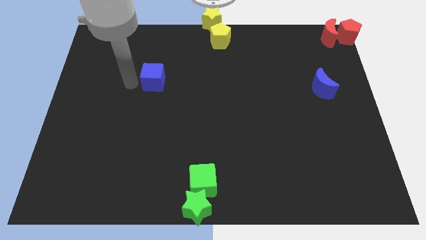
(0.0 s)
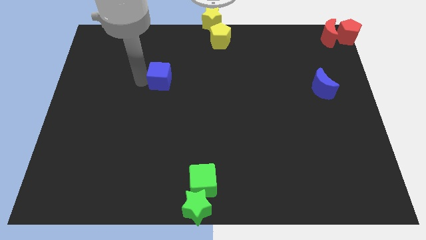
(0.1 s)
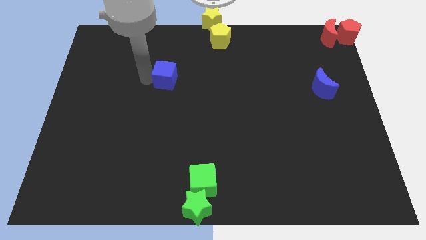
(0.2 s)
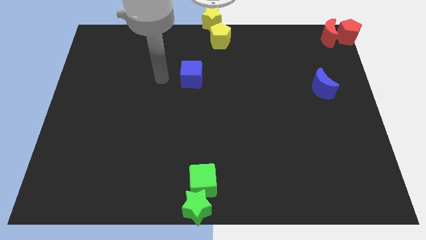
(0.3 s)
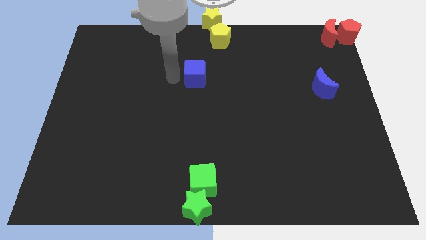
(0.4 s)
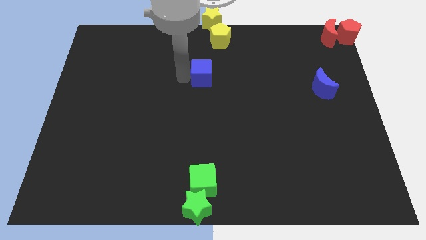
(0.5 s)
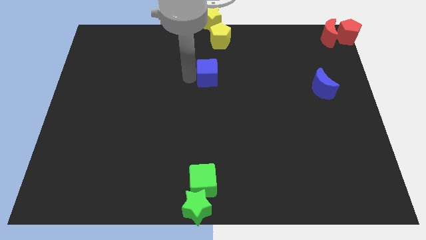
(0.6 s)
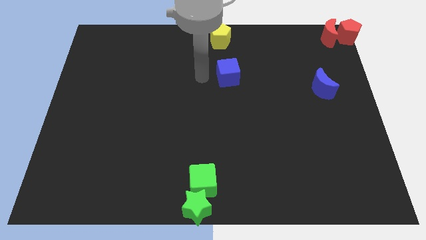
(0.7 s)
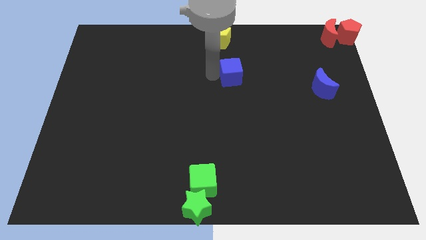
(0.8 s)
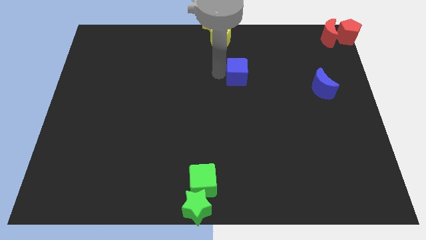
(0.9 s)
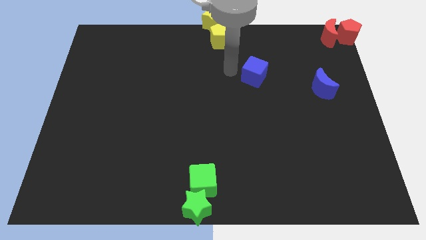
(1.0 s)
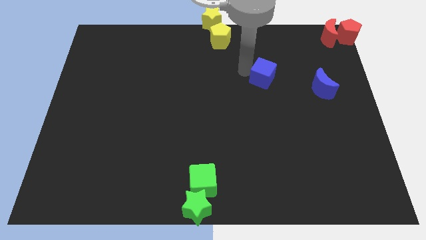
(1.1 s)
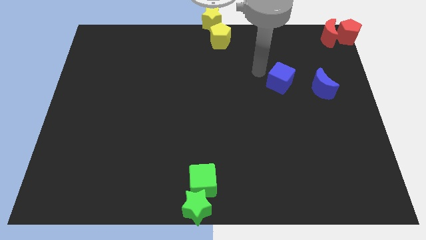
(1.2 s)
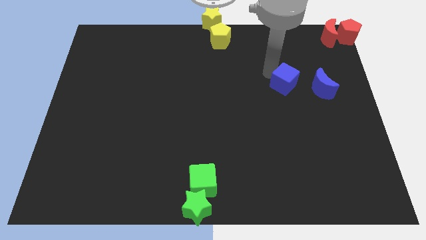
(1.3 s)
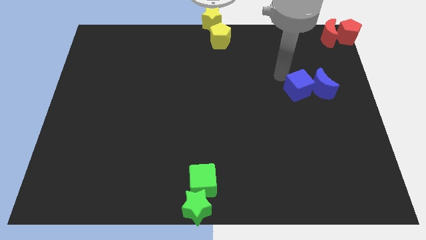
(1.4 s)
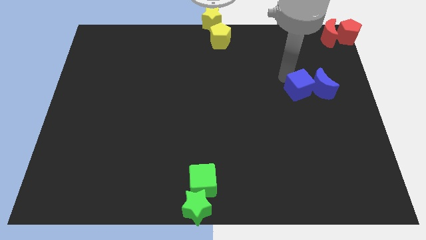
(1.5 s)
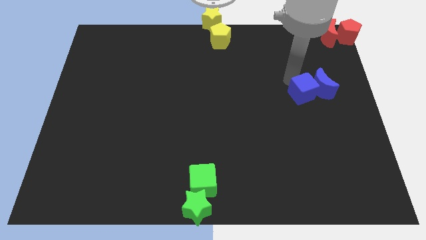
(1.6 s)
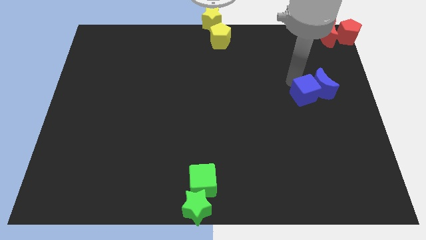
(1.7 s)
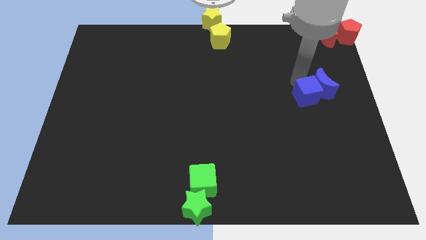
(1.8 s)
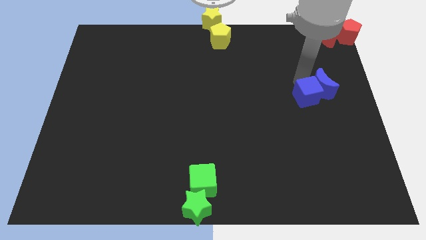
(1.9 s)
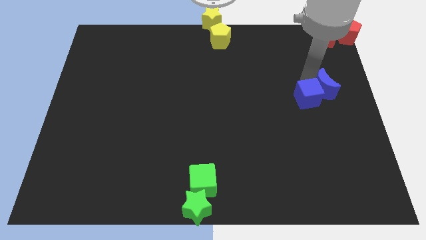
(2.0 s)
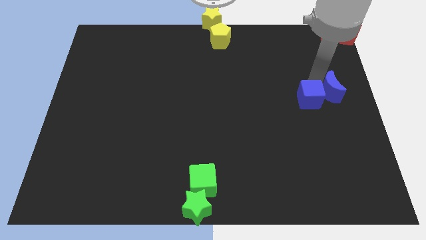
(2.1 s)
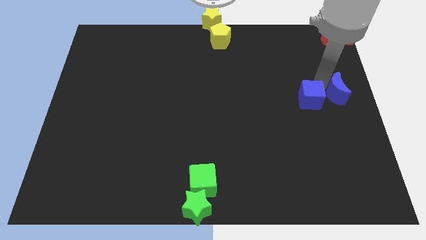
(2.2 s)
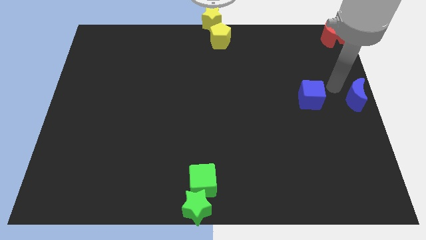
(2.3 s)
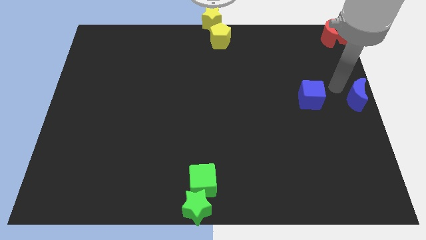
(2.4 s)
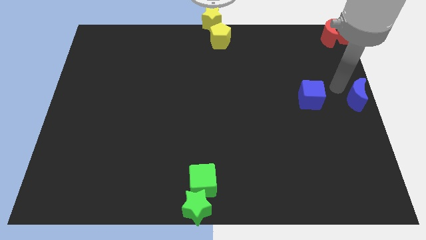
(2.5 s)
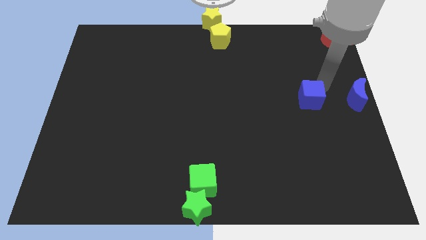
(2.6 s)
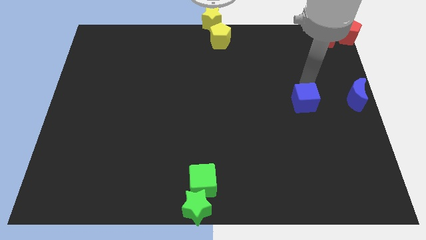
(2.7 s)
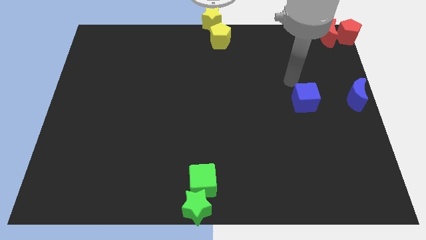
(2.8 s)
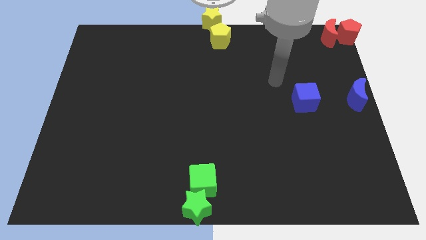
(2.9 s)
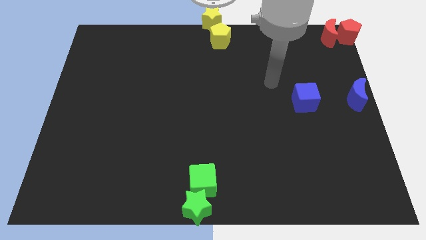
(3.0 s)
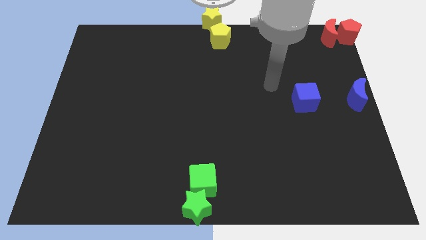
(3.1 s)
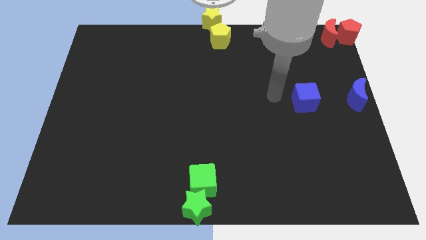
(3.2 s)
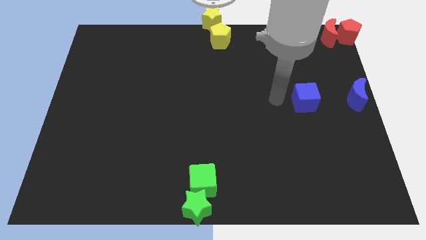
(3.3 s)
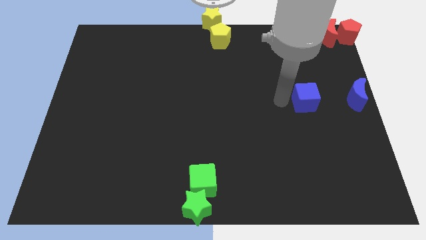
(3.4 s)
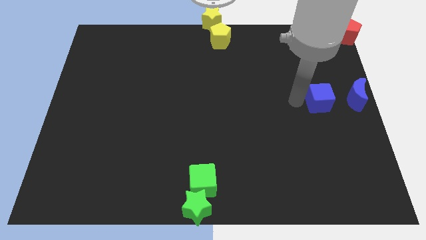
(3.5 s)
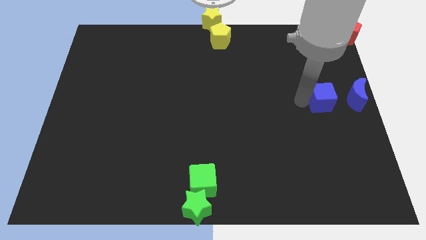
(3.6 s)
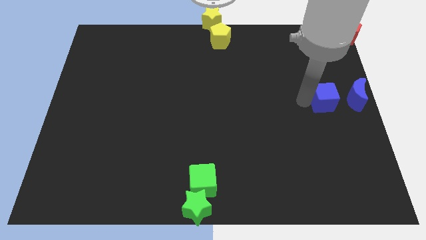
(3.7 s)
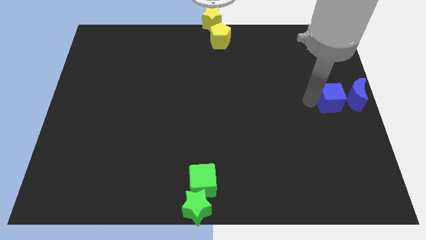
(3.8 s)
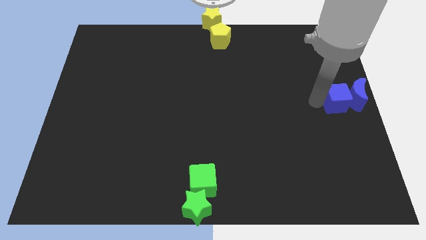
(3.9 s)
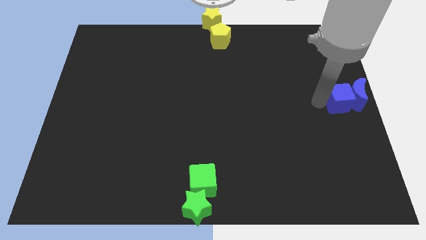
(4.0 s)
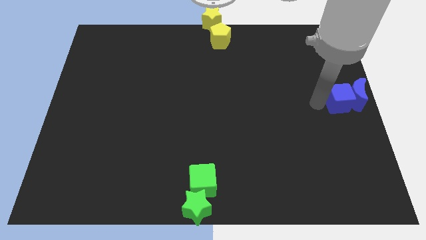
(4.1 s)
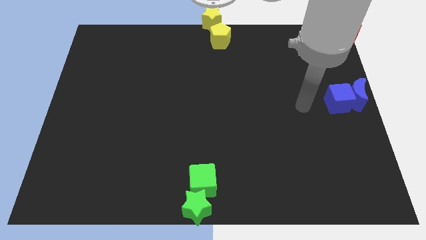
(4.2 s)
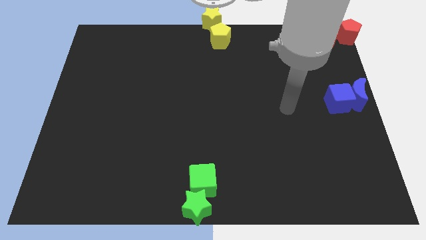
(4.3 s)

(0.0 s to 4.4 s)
place both the blue blocks at the center right

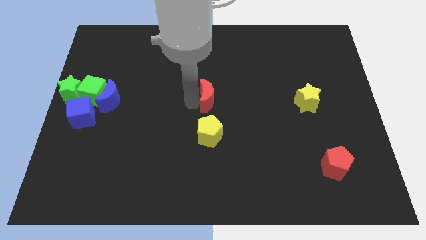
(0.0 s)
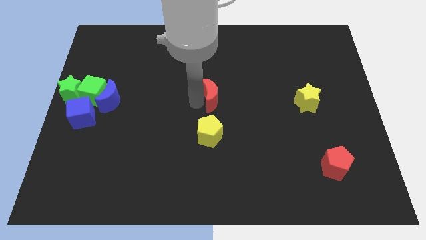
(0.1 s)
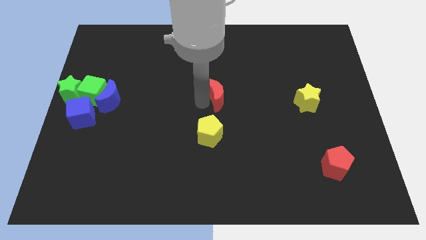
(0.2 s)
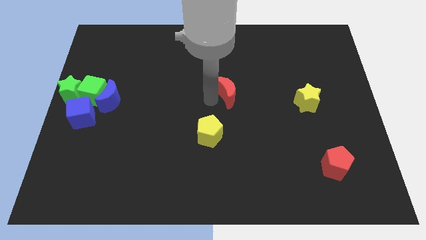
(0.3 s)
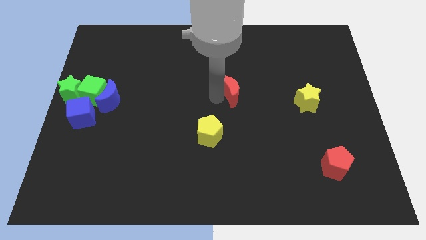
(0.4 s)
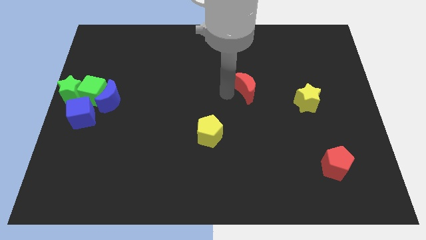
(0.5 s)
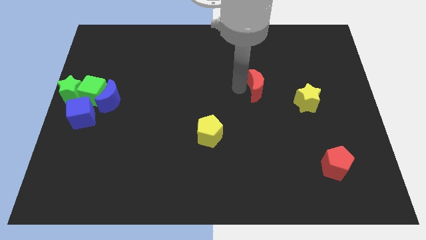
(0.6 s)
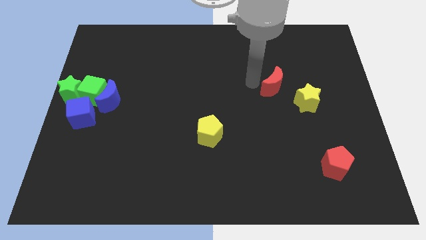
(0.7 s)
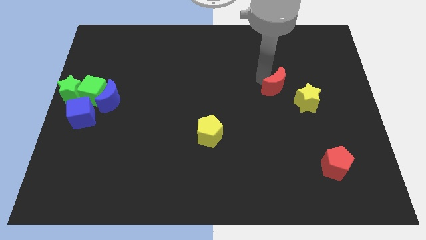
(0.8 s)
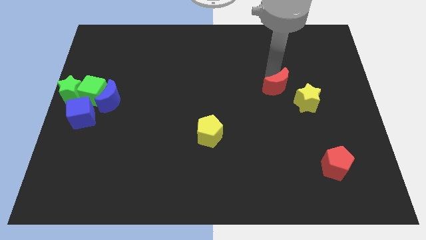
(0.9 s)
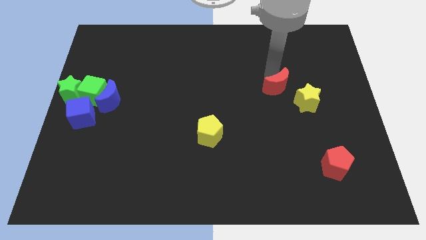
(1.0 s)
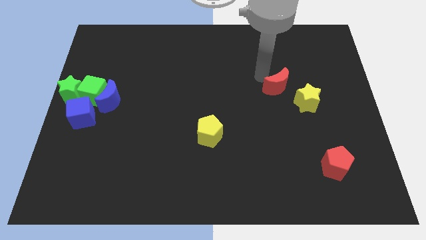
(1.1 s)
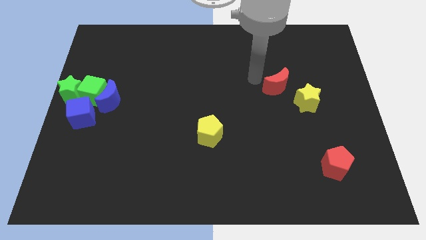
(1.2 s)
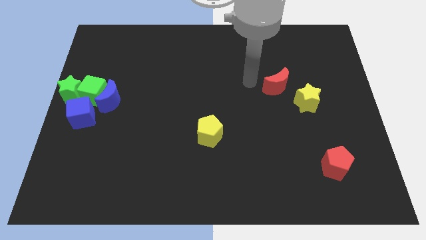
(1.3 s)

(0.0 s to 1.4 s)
move the red crescent top left to the yellow star

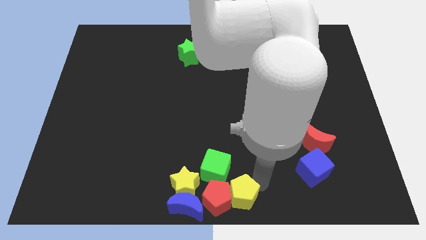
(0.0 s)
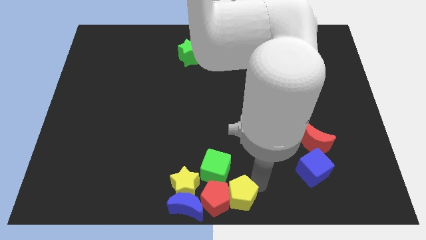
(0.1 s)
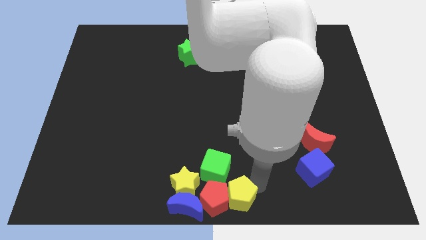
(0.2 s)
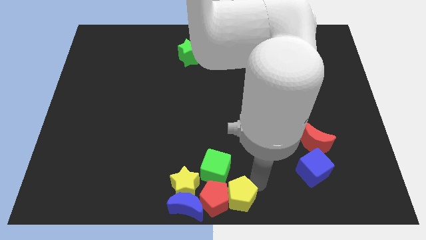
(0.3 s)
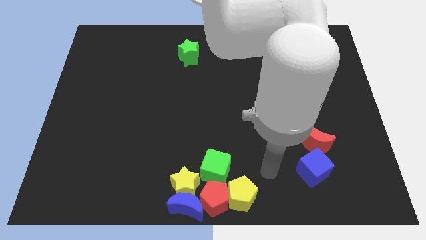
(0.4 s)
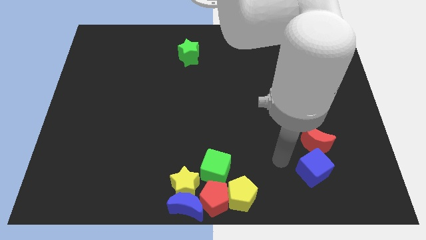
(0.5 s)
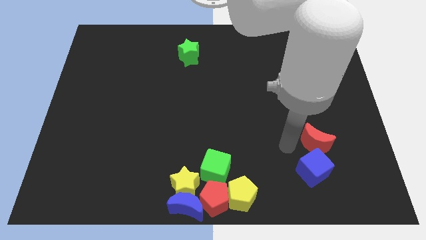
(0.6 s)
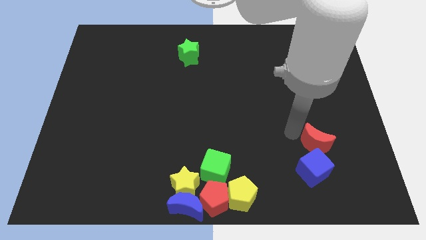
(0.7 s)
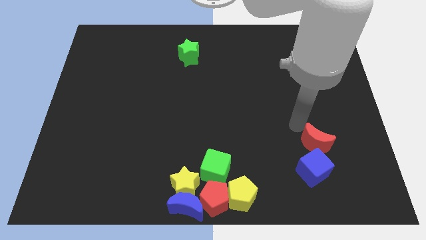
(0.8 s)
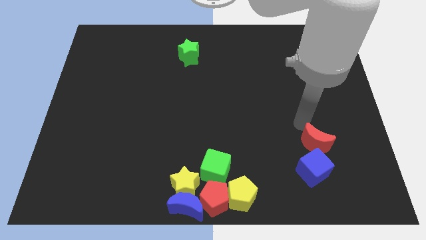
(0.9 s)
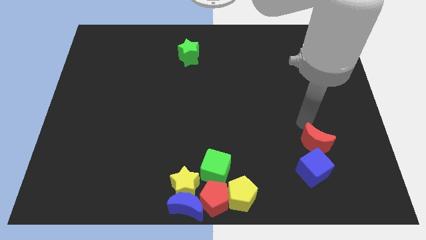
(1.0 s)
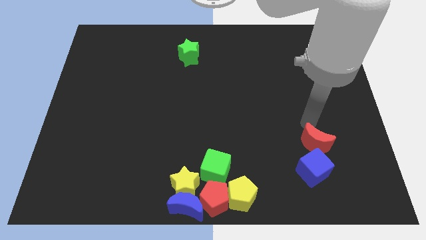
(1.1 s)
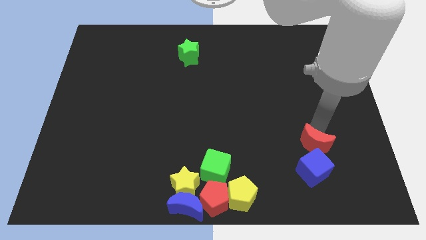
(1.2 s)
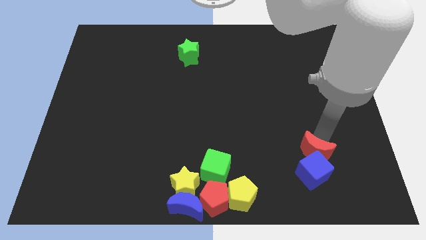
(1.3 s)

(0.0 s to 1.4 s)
point your arm towards the top left side of the red moon

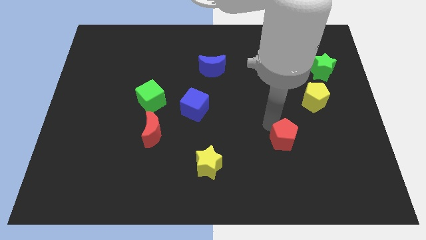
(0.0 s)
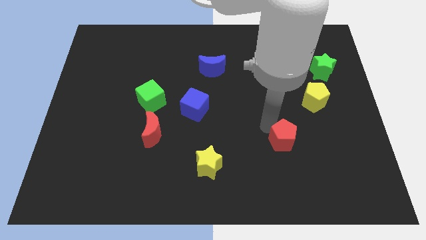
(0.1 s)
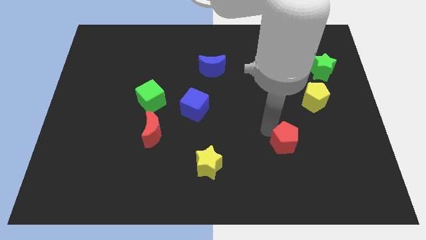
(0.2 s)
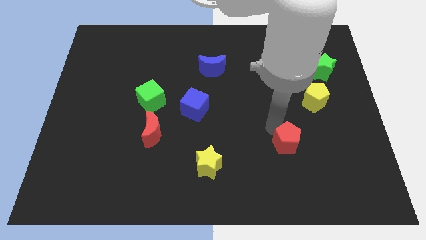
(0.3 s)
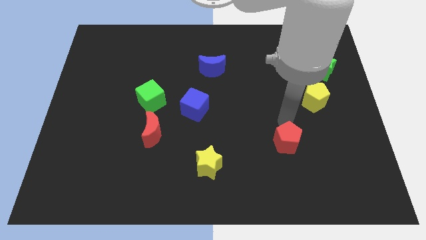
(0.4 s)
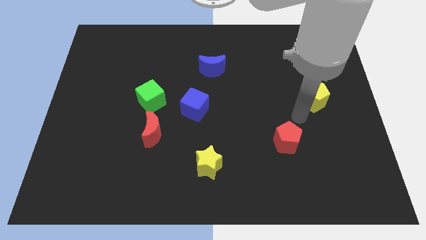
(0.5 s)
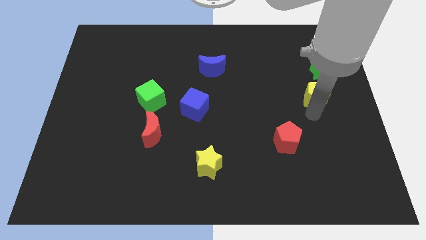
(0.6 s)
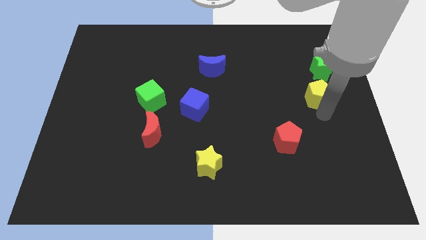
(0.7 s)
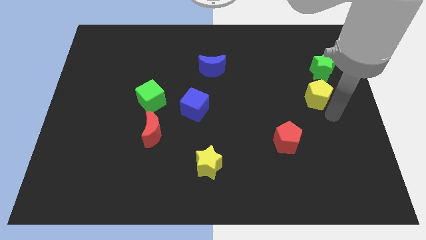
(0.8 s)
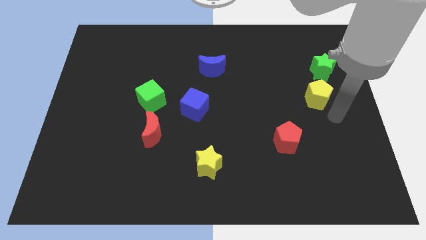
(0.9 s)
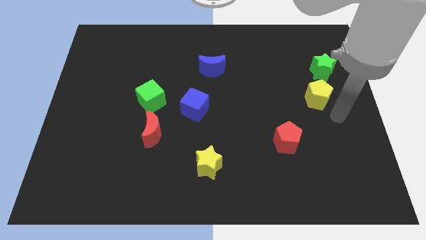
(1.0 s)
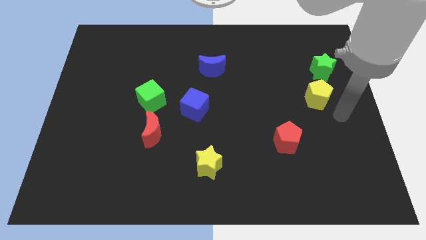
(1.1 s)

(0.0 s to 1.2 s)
move the arm away from the red pentagon

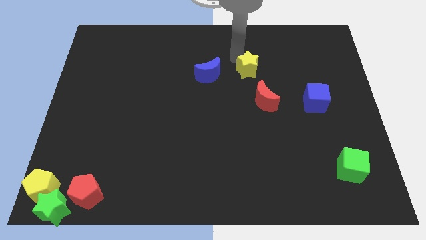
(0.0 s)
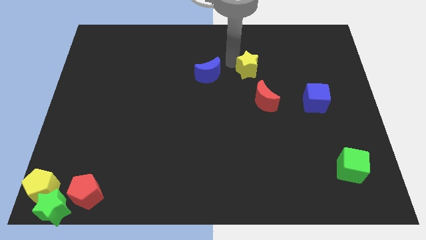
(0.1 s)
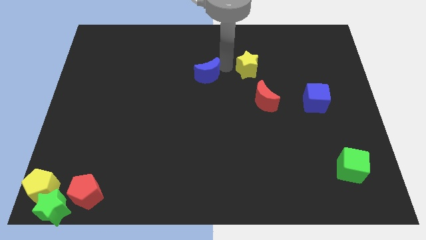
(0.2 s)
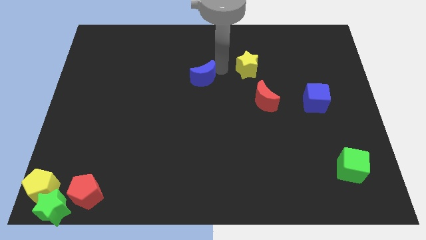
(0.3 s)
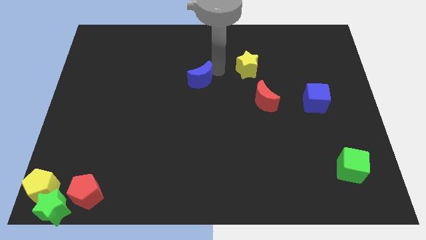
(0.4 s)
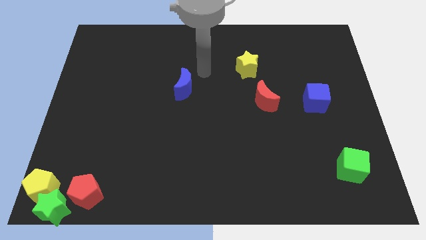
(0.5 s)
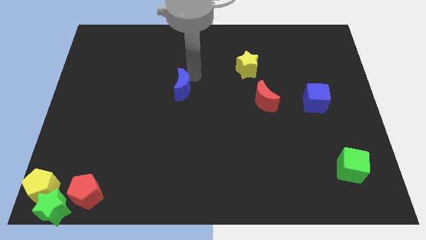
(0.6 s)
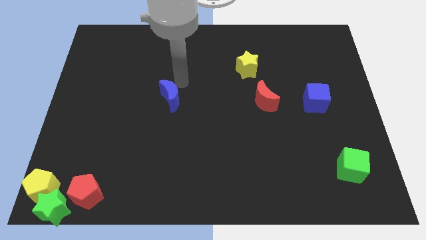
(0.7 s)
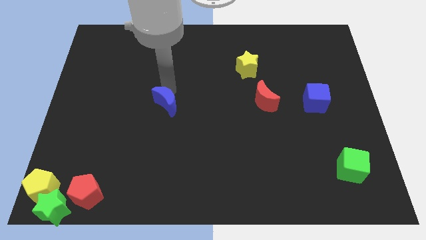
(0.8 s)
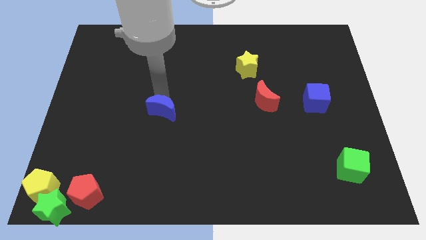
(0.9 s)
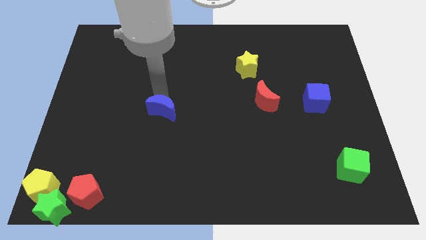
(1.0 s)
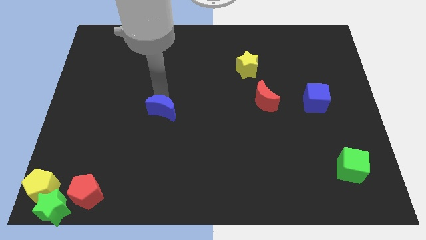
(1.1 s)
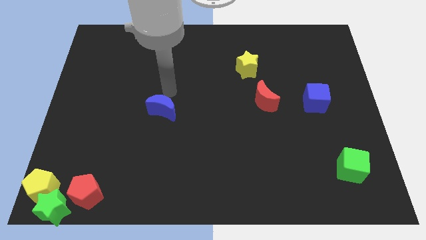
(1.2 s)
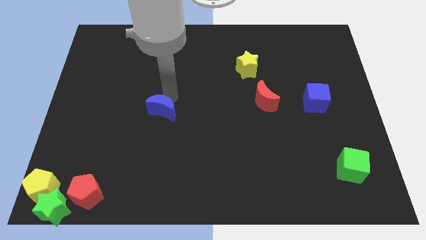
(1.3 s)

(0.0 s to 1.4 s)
place the blue moon left to the red moon
